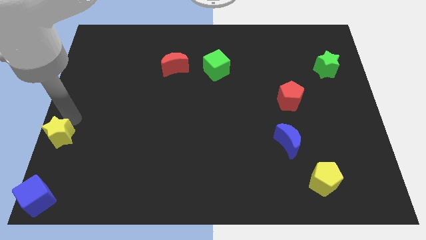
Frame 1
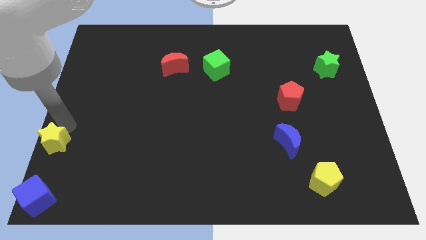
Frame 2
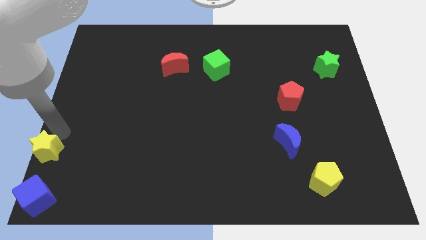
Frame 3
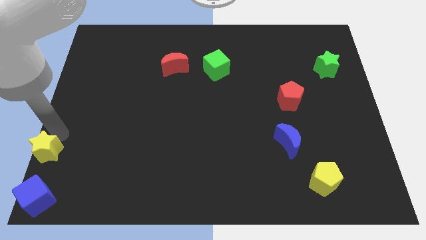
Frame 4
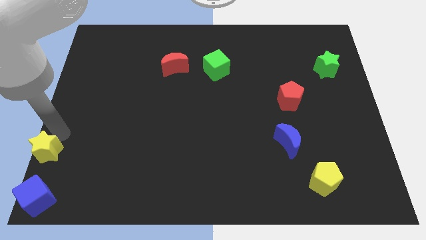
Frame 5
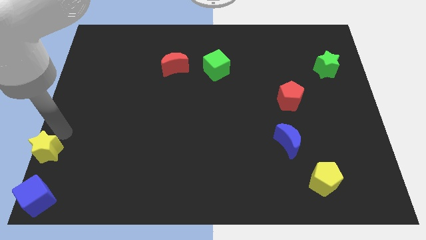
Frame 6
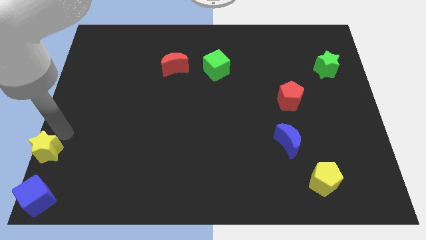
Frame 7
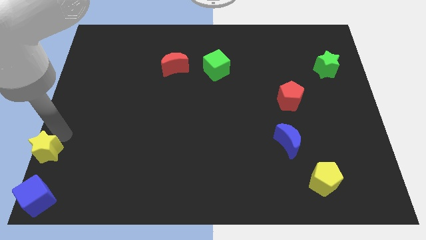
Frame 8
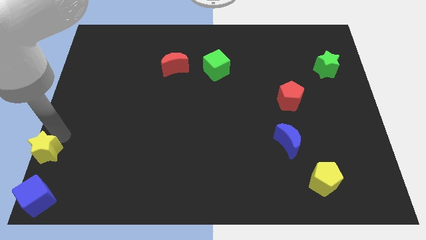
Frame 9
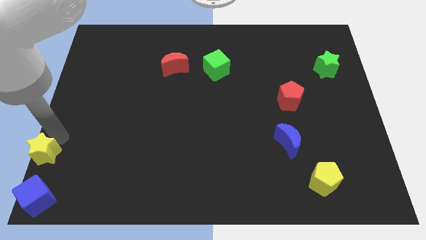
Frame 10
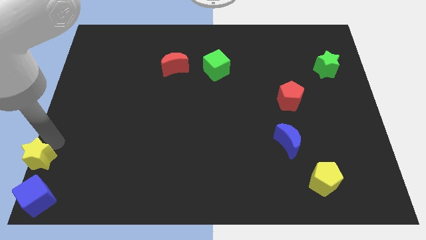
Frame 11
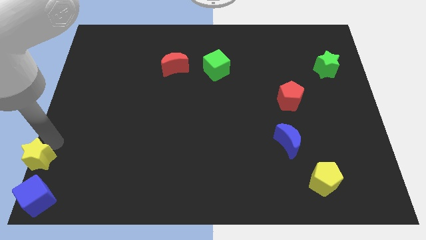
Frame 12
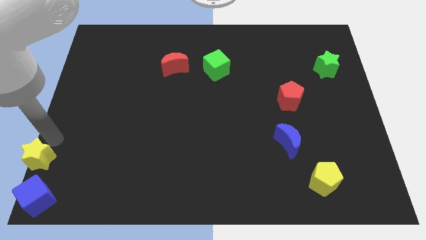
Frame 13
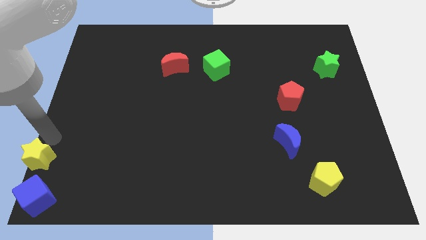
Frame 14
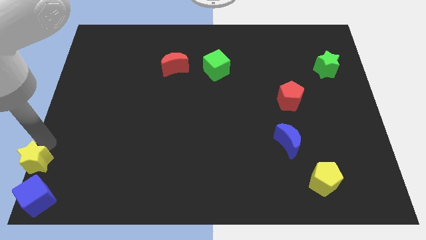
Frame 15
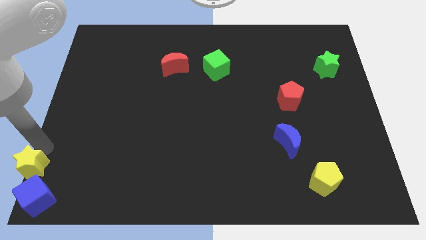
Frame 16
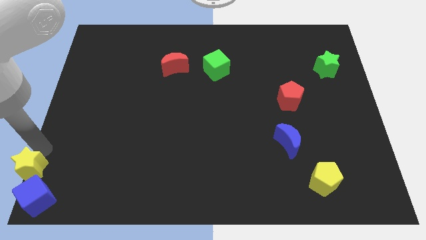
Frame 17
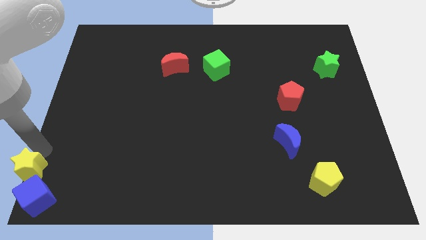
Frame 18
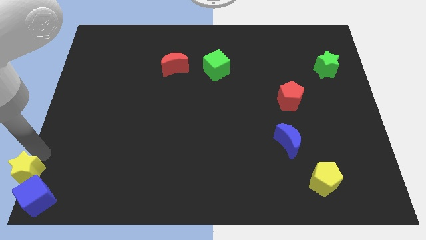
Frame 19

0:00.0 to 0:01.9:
slightly move the yellow star into the blue cube

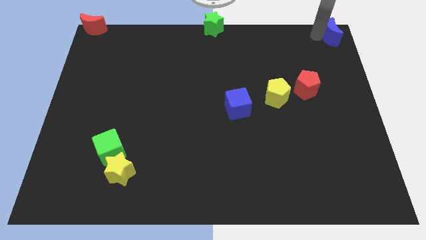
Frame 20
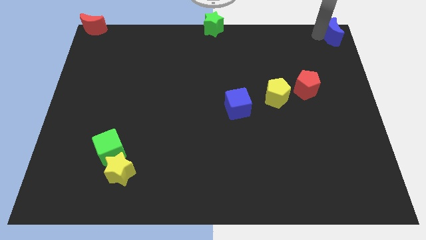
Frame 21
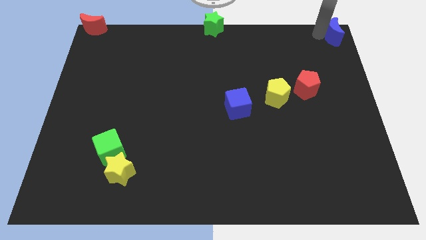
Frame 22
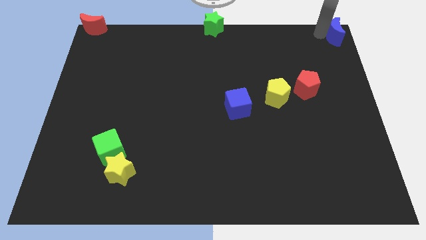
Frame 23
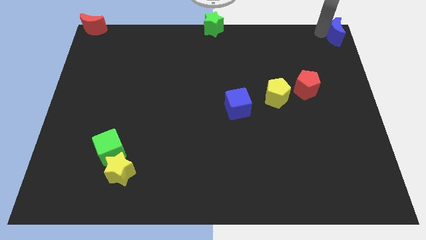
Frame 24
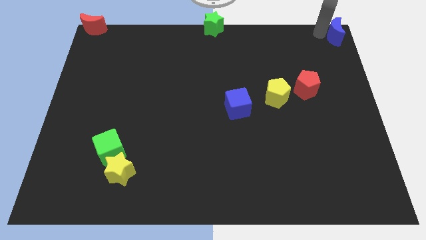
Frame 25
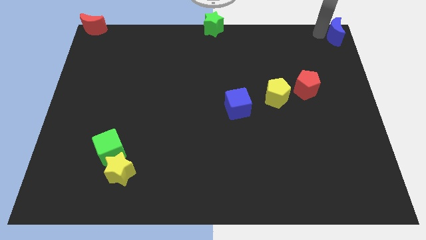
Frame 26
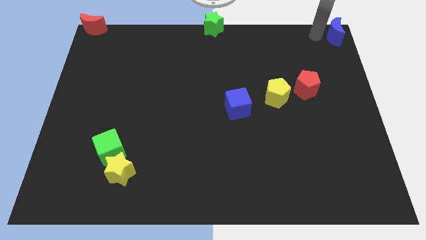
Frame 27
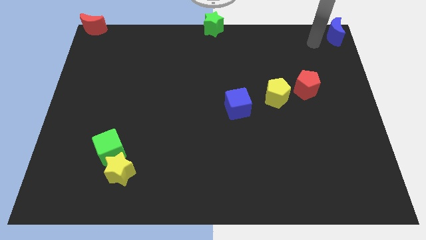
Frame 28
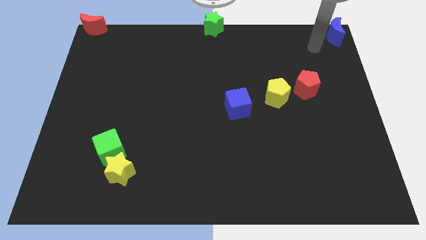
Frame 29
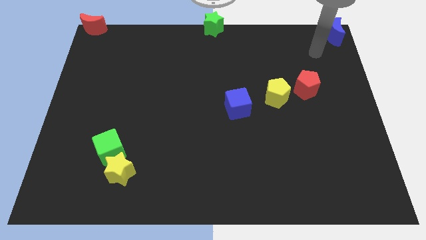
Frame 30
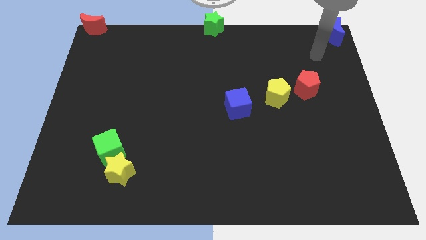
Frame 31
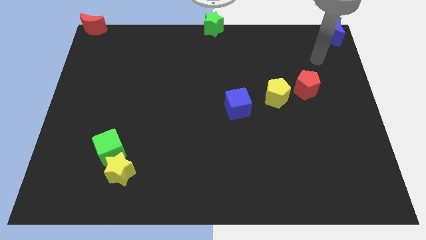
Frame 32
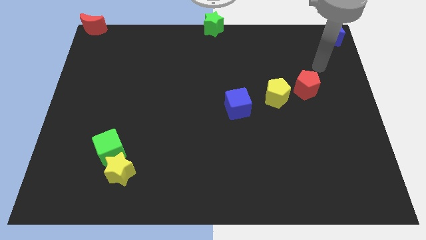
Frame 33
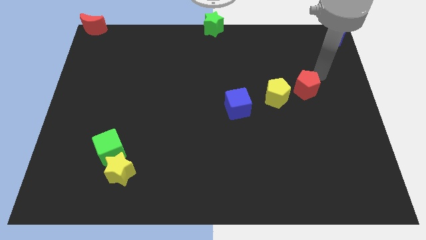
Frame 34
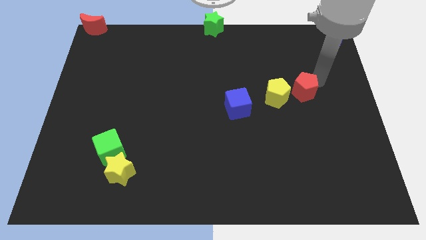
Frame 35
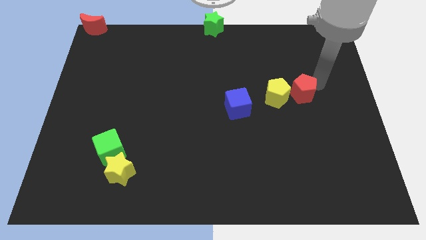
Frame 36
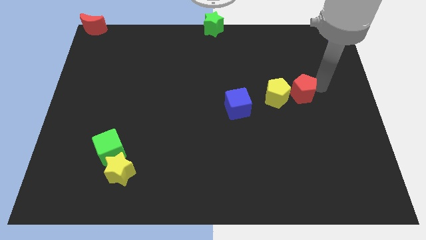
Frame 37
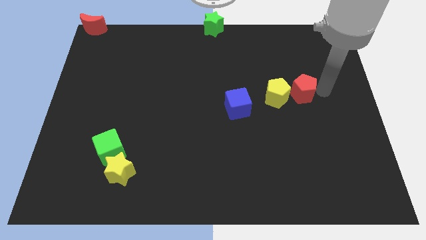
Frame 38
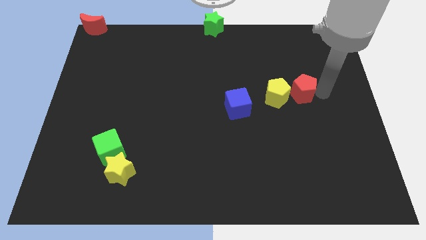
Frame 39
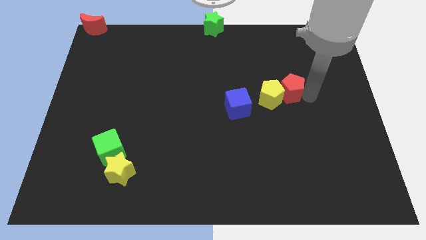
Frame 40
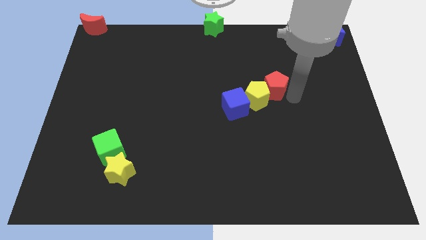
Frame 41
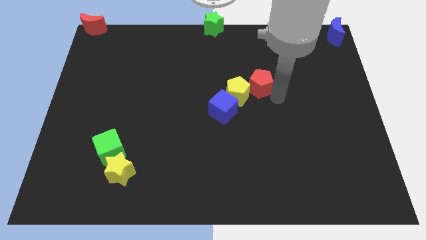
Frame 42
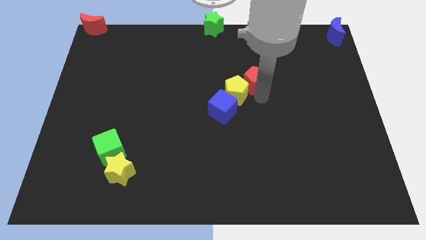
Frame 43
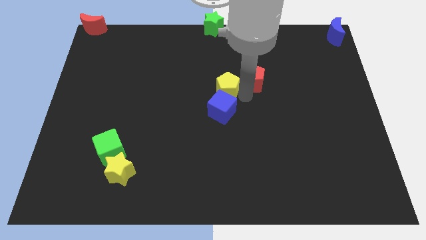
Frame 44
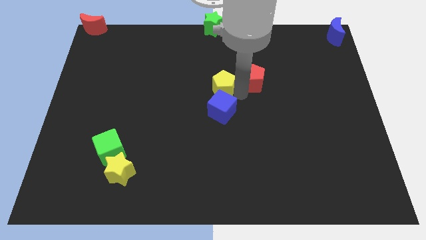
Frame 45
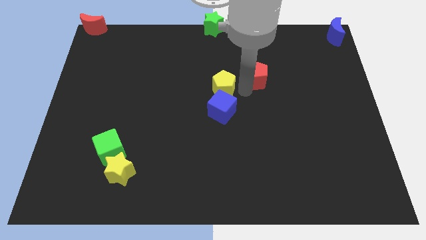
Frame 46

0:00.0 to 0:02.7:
push yellow pentagon above blue cube

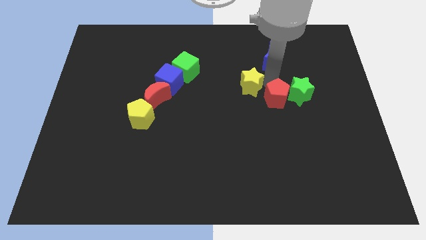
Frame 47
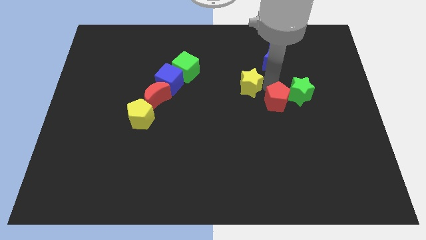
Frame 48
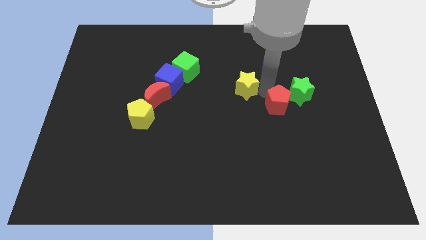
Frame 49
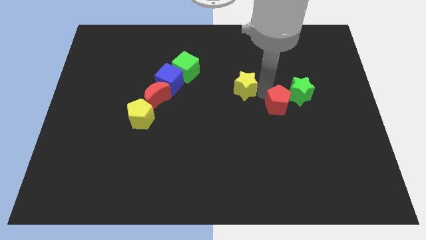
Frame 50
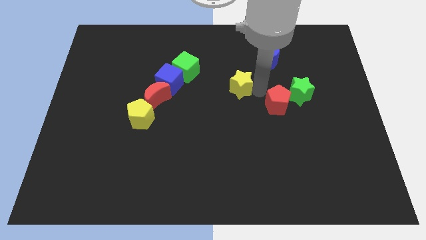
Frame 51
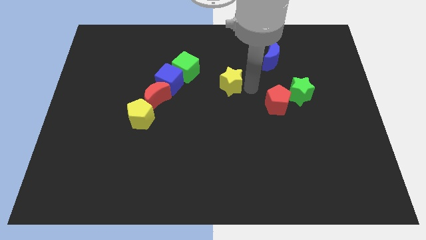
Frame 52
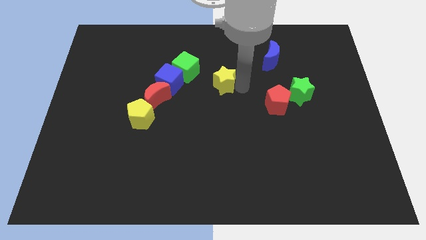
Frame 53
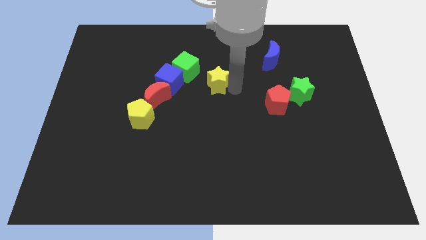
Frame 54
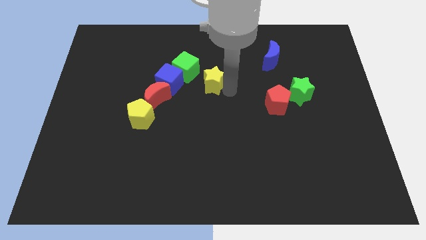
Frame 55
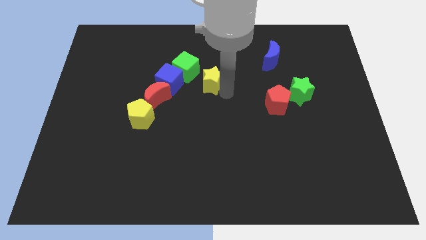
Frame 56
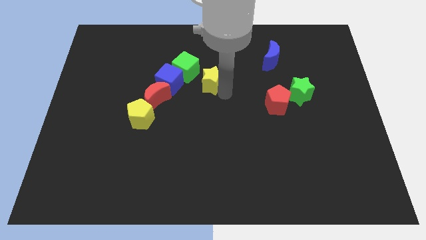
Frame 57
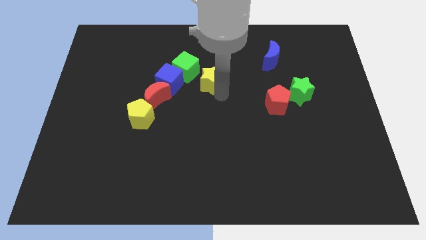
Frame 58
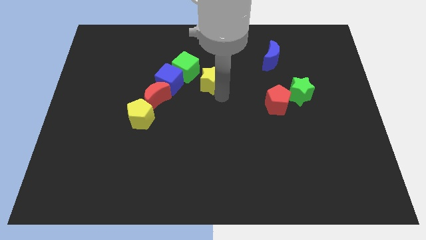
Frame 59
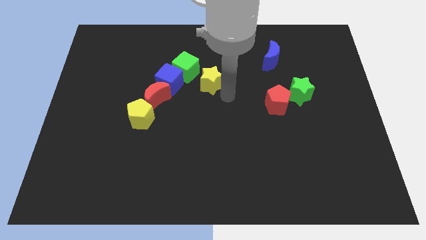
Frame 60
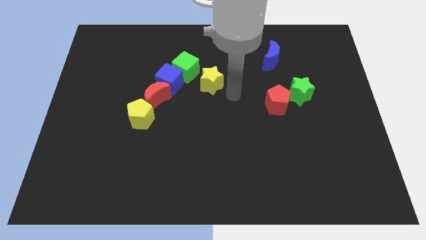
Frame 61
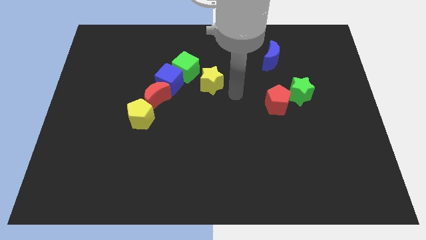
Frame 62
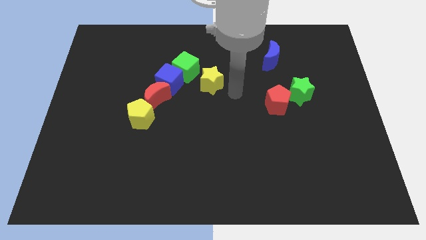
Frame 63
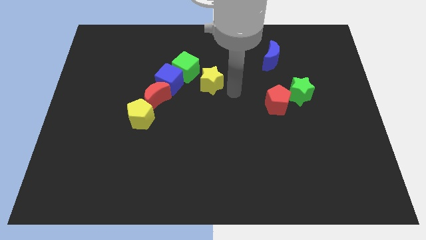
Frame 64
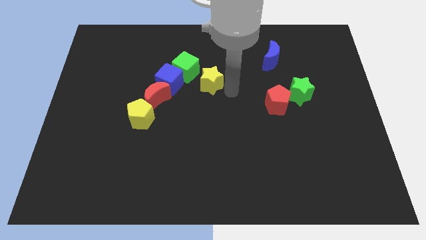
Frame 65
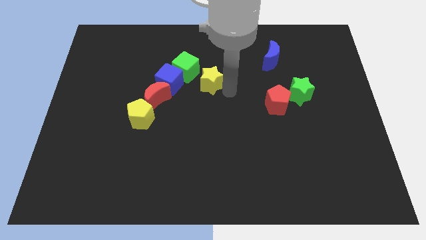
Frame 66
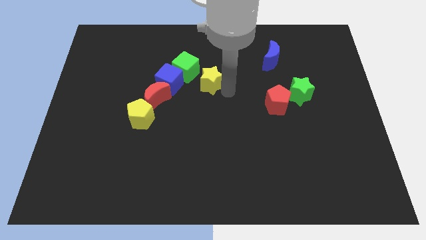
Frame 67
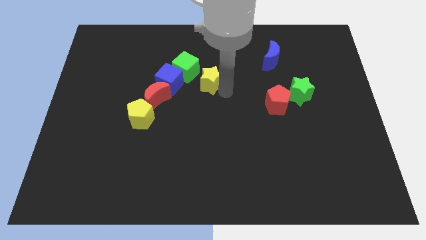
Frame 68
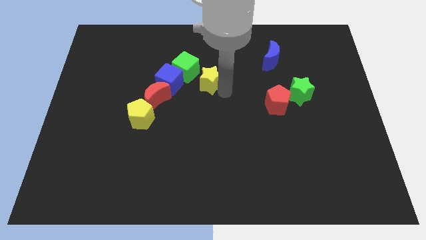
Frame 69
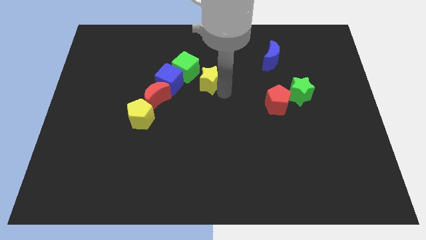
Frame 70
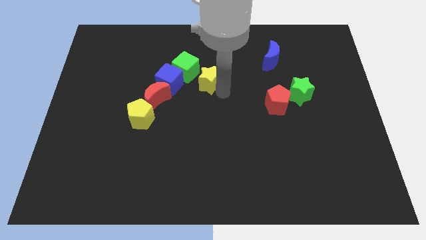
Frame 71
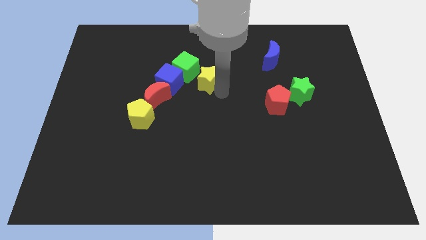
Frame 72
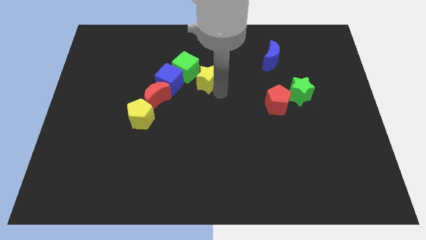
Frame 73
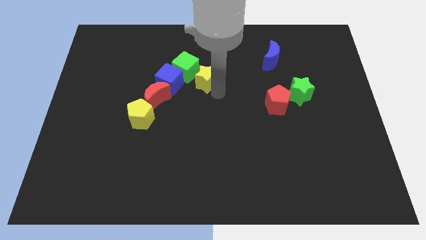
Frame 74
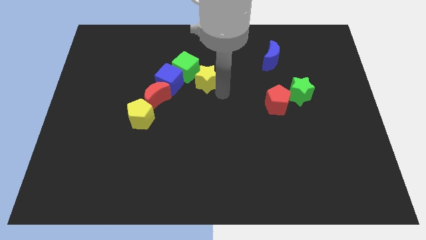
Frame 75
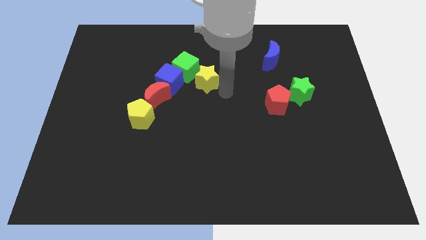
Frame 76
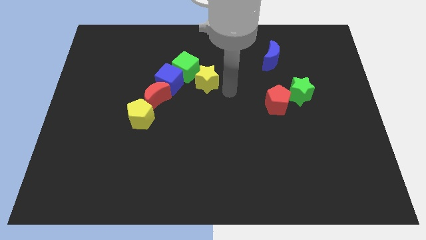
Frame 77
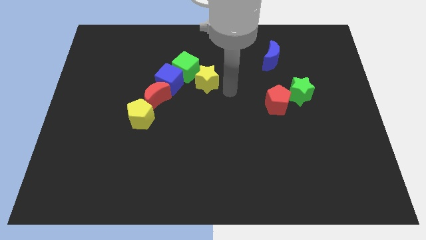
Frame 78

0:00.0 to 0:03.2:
push the yellow star bottom right to the green cube

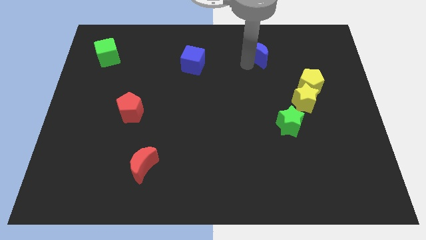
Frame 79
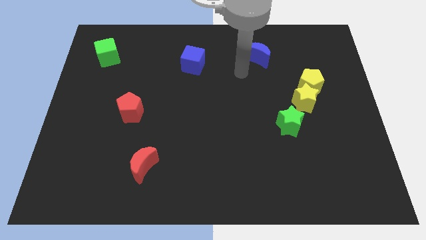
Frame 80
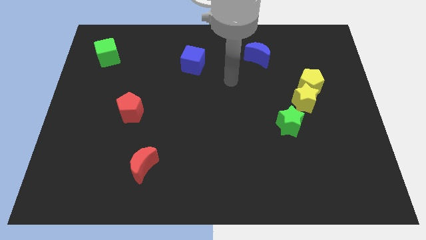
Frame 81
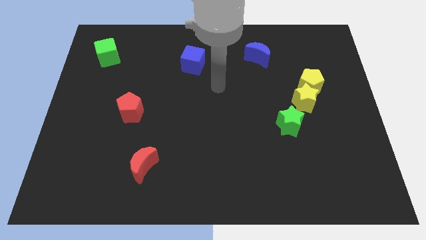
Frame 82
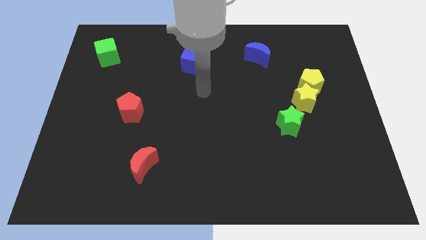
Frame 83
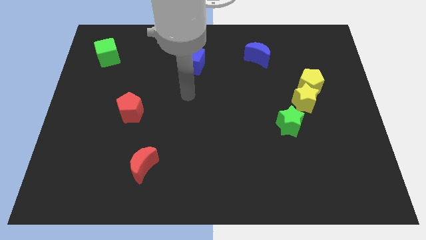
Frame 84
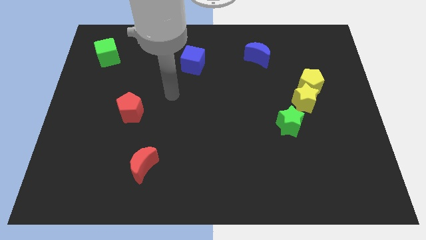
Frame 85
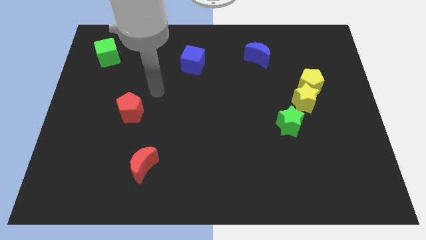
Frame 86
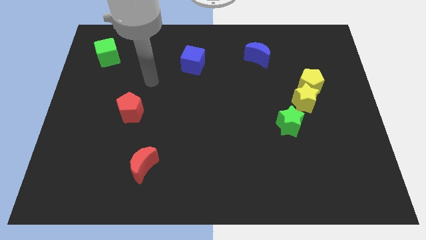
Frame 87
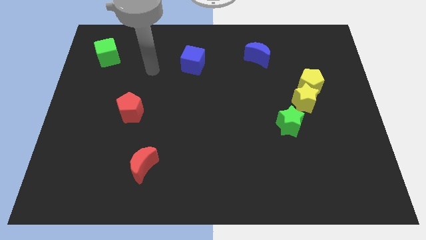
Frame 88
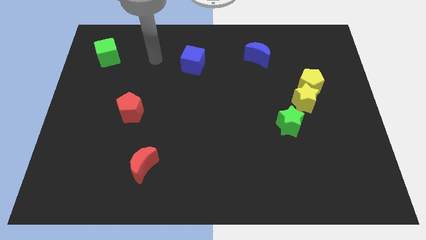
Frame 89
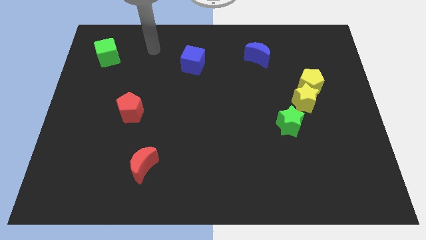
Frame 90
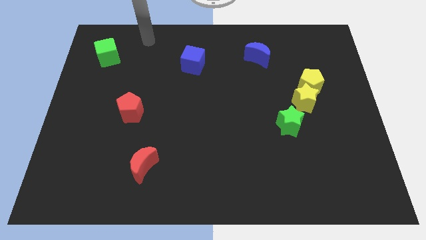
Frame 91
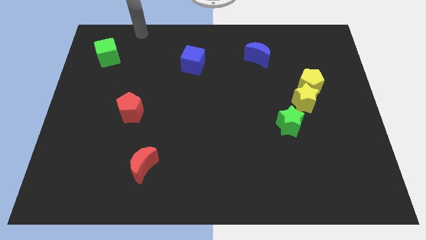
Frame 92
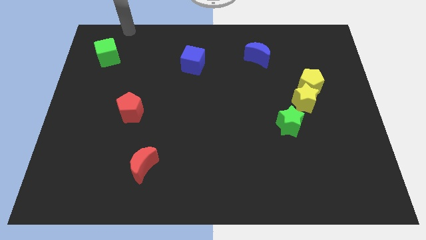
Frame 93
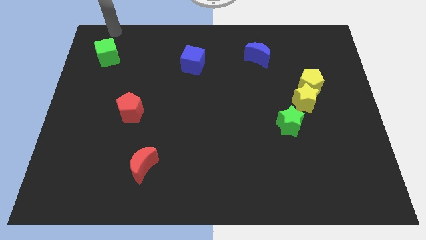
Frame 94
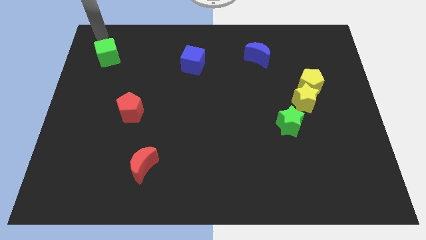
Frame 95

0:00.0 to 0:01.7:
move your arm away from the blue moon
